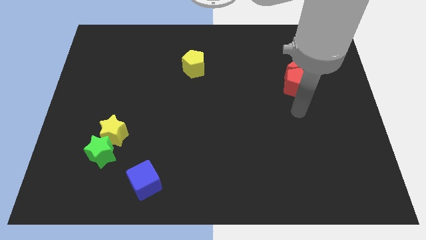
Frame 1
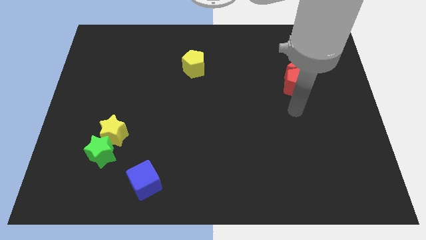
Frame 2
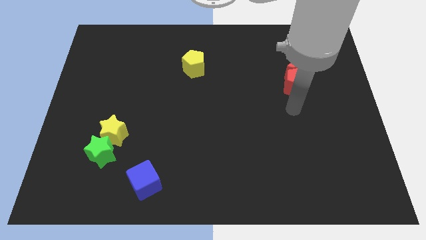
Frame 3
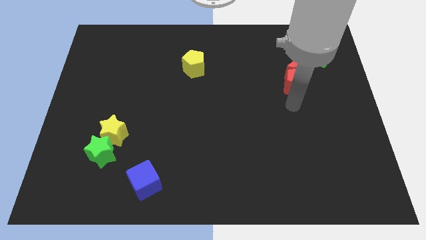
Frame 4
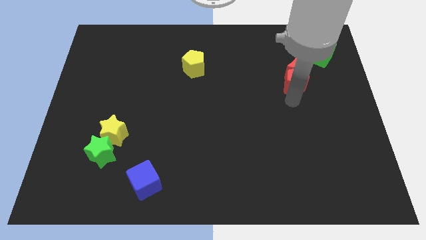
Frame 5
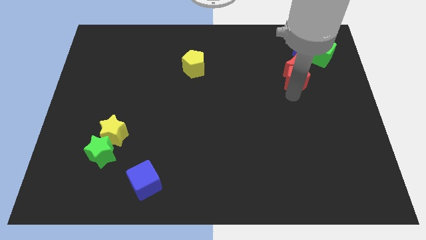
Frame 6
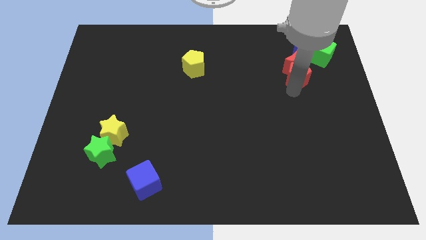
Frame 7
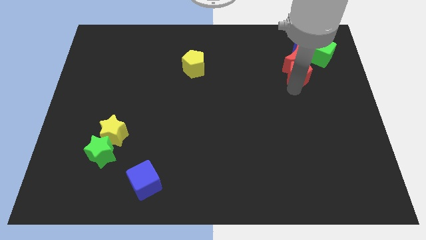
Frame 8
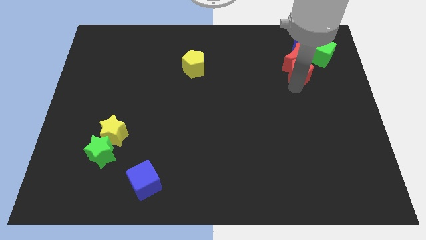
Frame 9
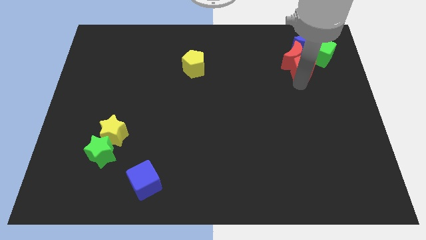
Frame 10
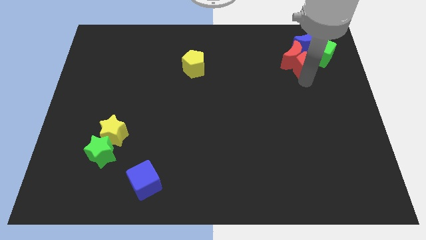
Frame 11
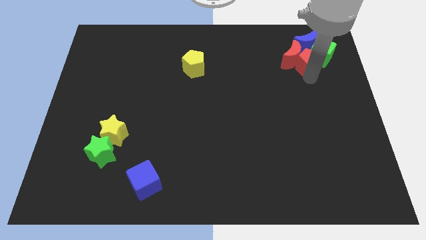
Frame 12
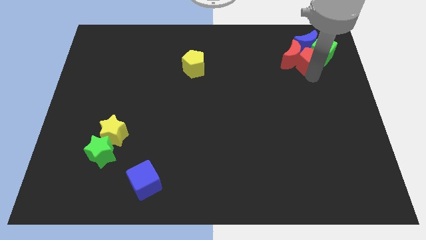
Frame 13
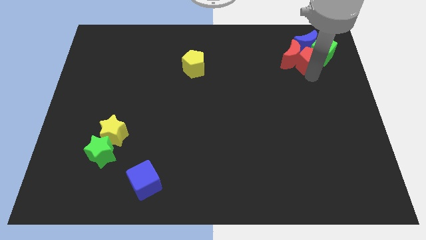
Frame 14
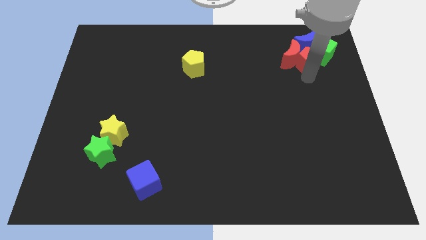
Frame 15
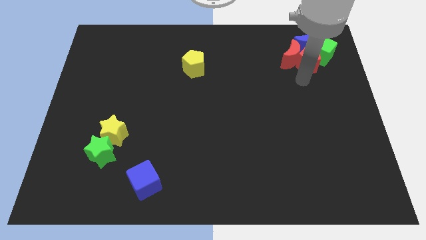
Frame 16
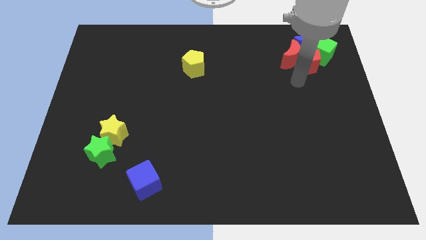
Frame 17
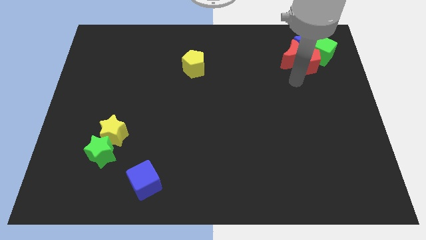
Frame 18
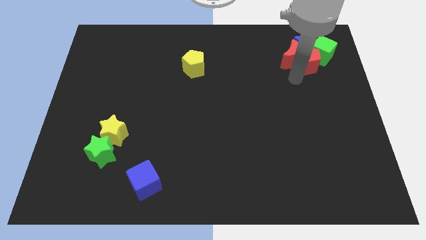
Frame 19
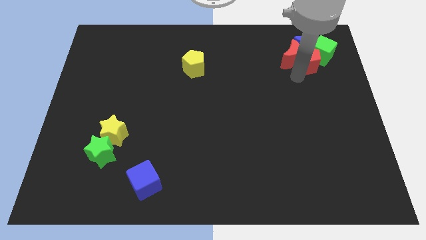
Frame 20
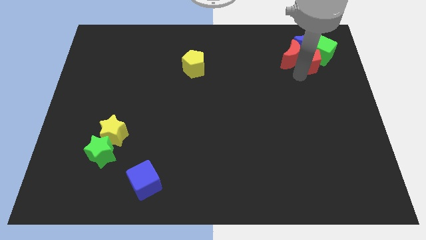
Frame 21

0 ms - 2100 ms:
push the red blocks below the green cube and blue moon

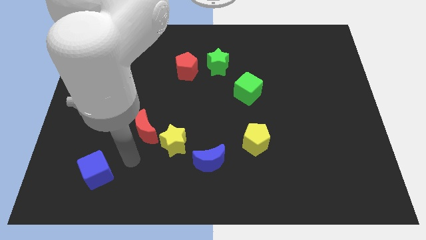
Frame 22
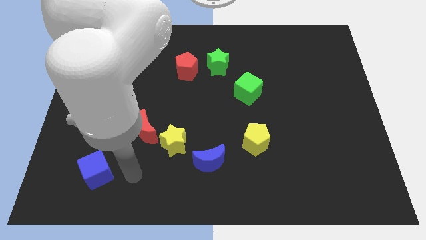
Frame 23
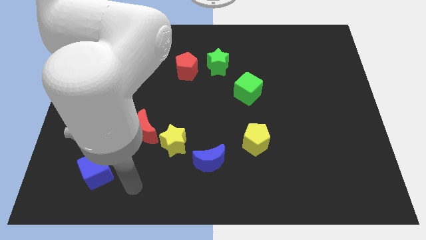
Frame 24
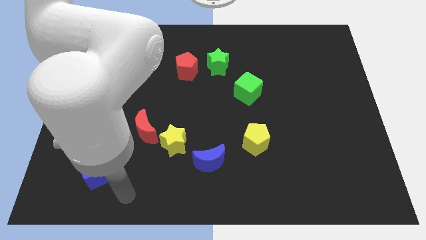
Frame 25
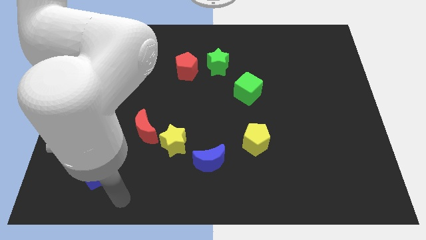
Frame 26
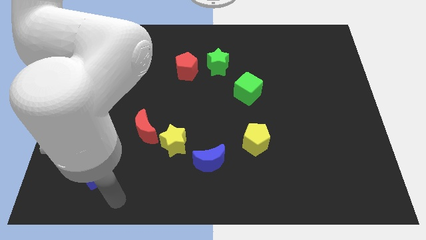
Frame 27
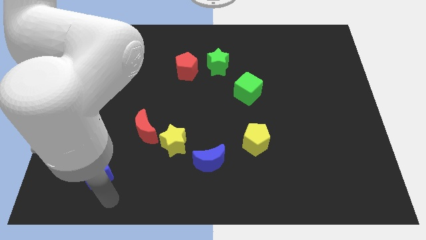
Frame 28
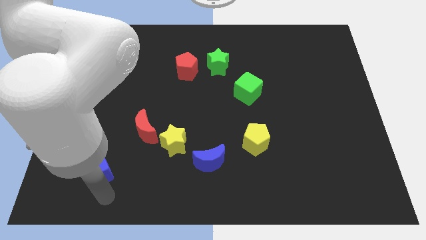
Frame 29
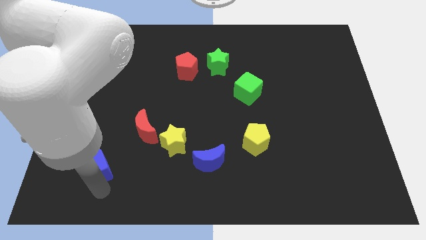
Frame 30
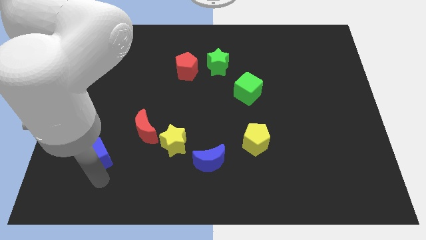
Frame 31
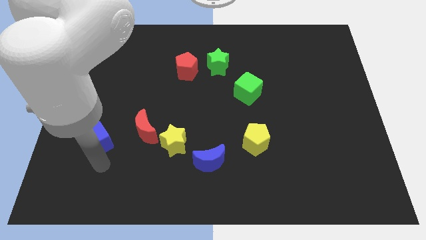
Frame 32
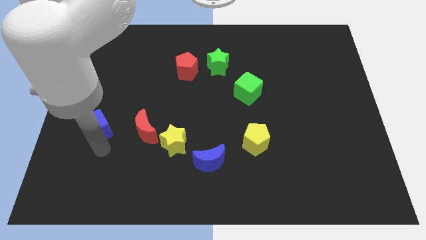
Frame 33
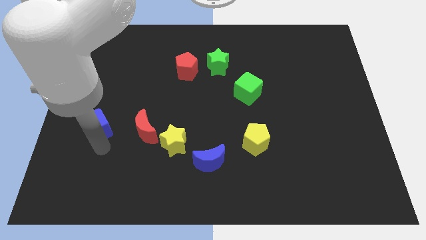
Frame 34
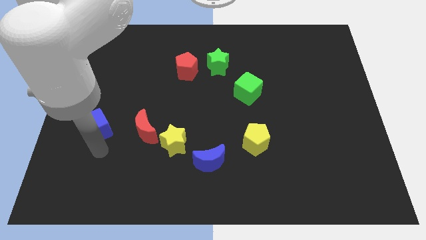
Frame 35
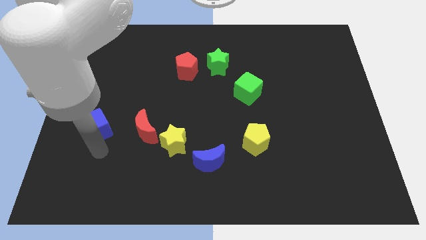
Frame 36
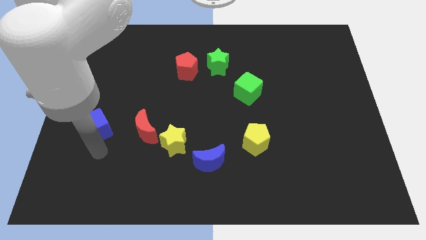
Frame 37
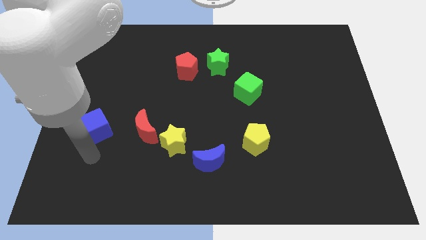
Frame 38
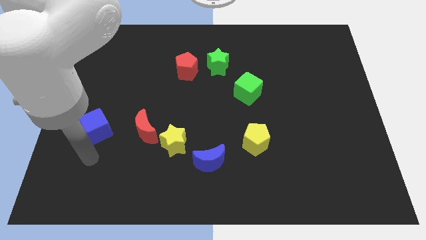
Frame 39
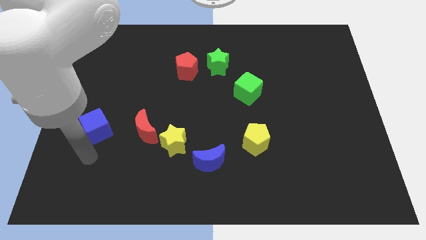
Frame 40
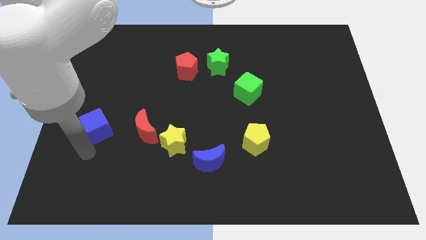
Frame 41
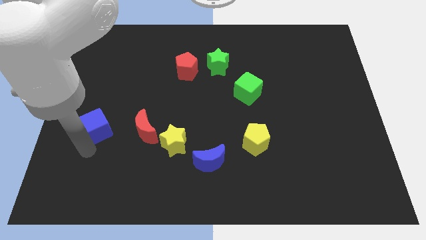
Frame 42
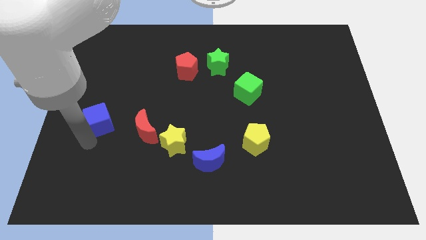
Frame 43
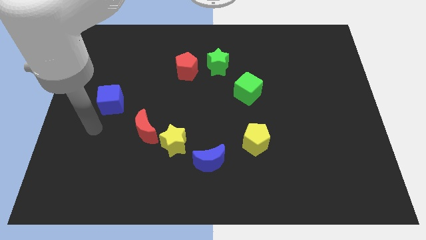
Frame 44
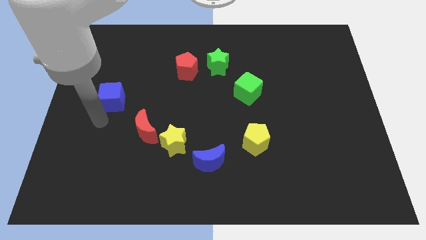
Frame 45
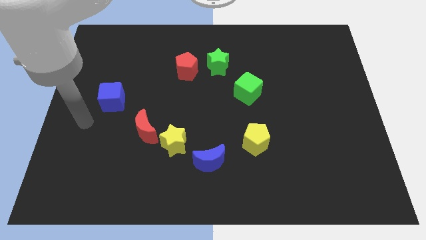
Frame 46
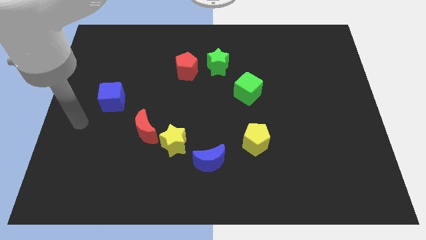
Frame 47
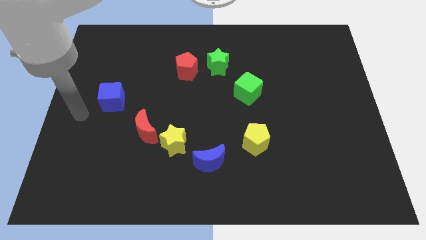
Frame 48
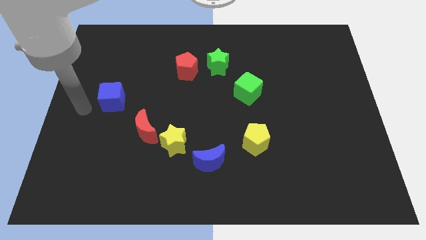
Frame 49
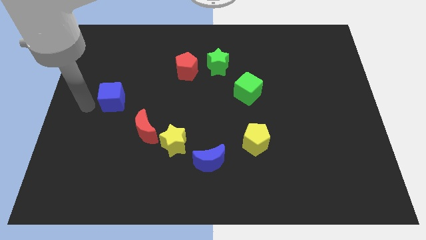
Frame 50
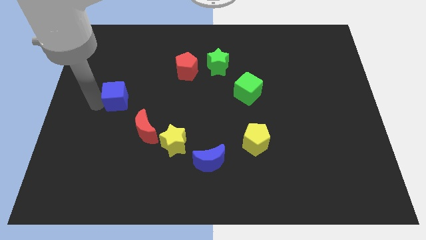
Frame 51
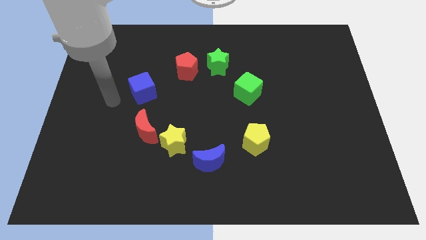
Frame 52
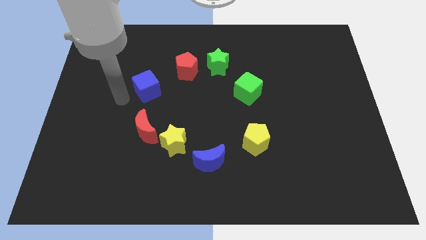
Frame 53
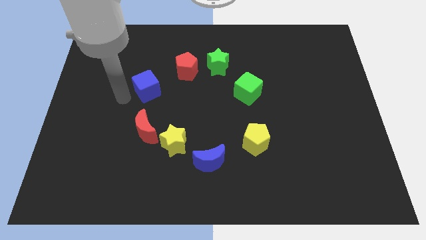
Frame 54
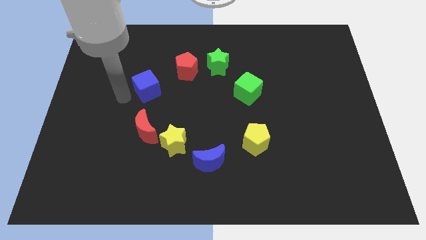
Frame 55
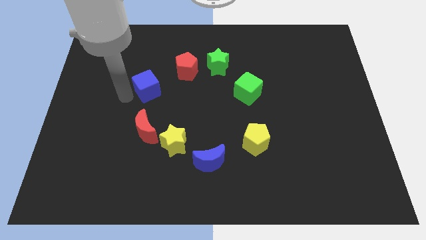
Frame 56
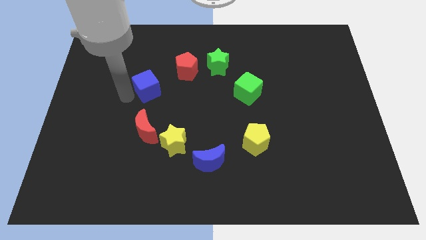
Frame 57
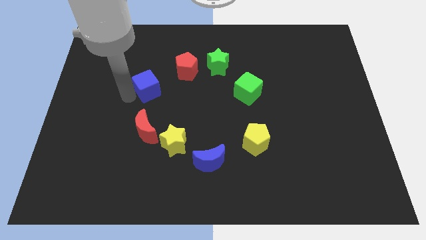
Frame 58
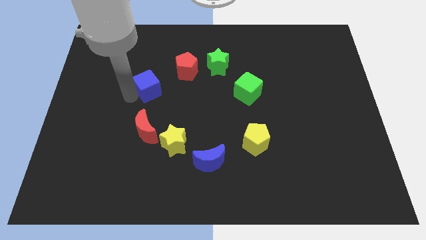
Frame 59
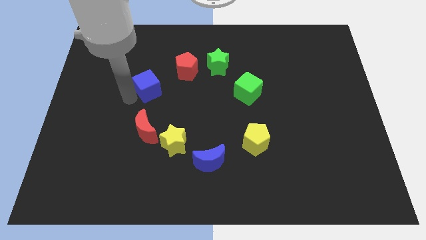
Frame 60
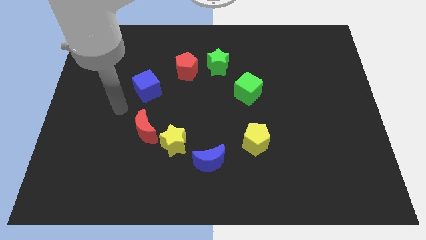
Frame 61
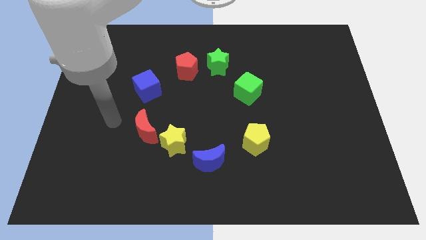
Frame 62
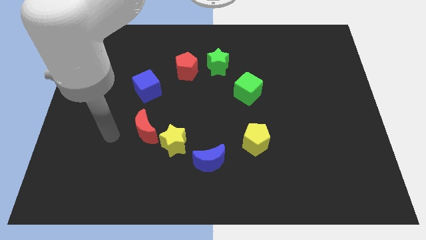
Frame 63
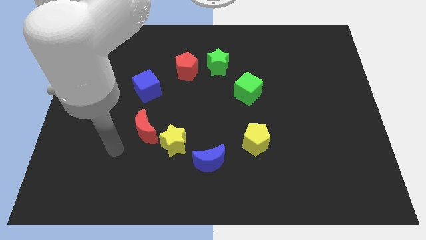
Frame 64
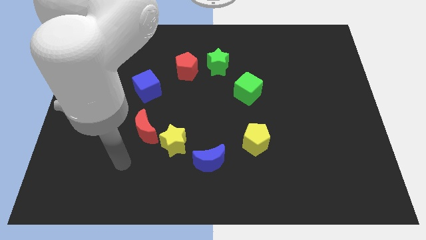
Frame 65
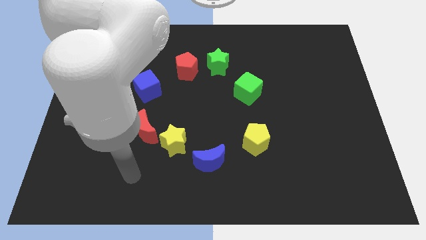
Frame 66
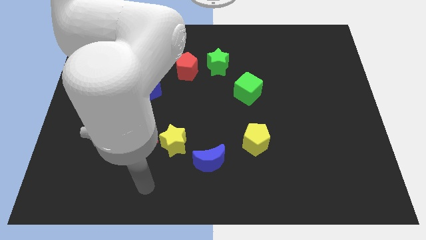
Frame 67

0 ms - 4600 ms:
place the blue cube to the top of the red crescent

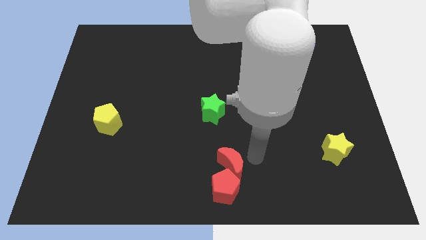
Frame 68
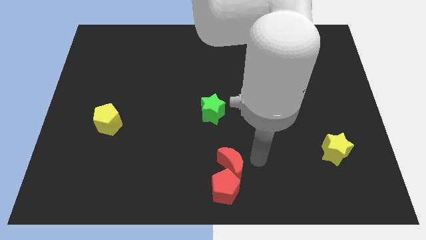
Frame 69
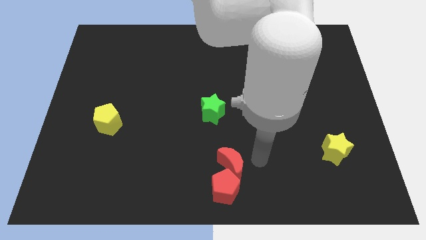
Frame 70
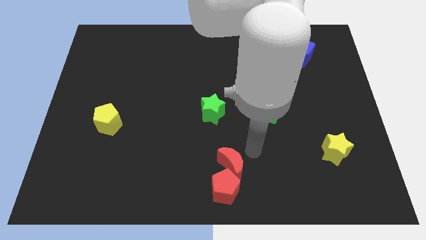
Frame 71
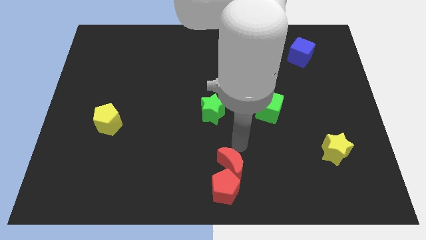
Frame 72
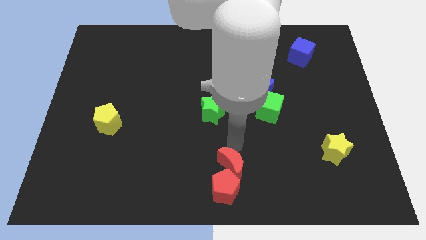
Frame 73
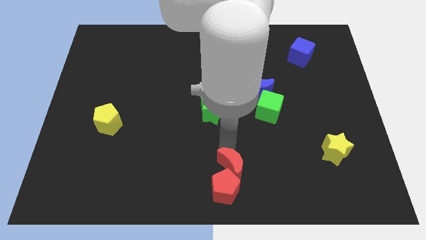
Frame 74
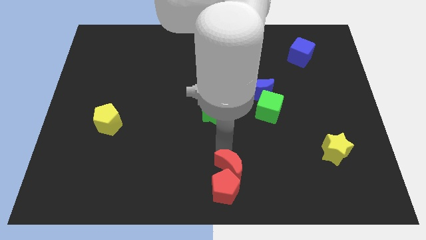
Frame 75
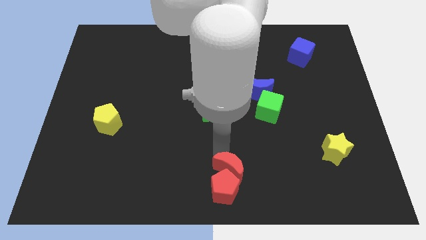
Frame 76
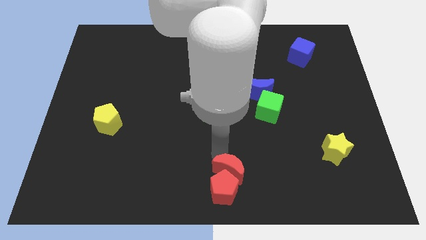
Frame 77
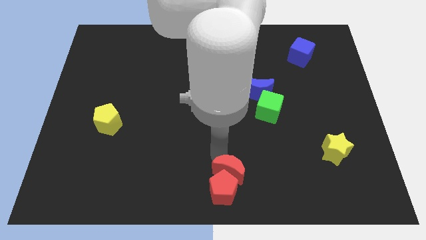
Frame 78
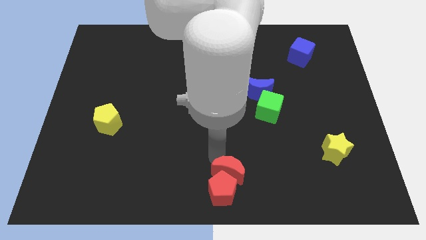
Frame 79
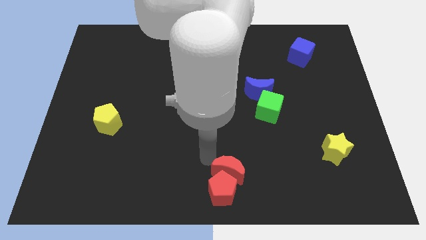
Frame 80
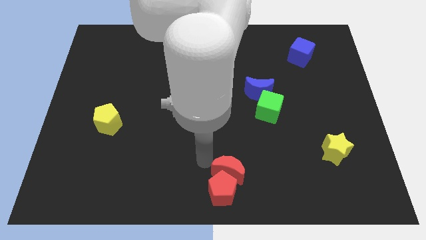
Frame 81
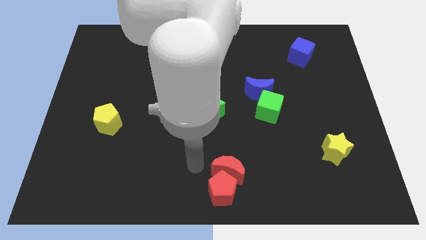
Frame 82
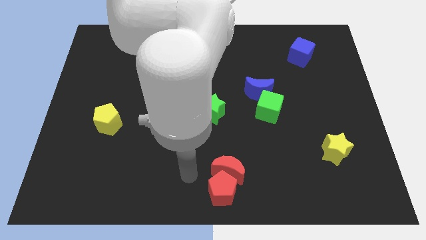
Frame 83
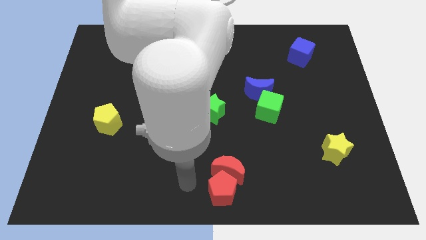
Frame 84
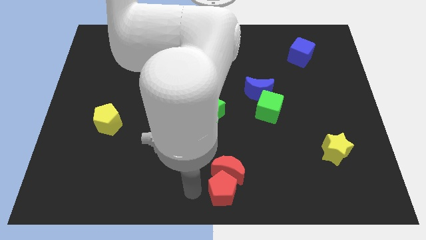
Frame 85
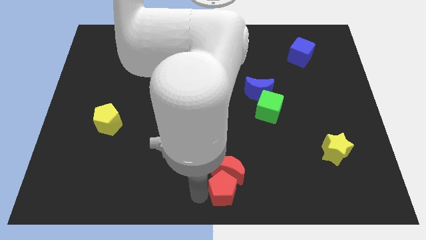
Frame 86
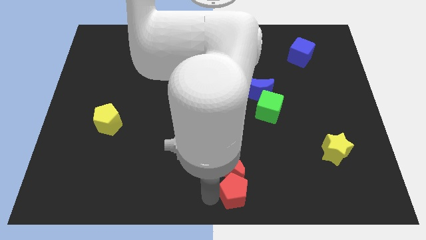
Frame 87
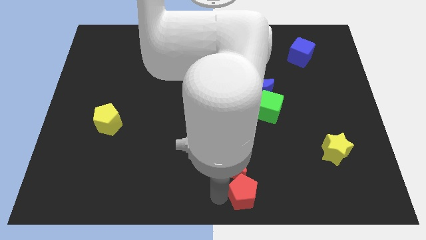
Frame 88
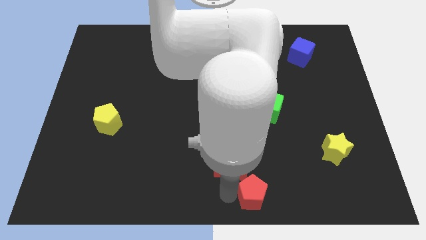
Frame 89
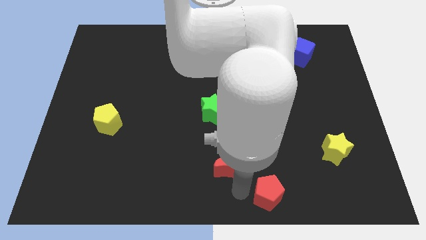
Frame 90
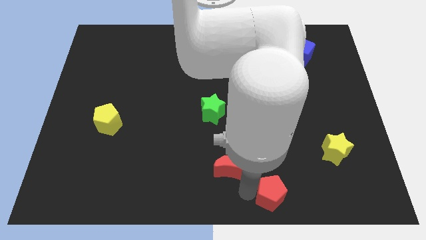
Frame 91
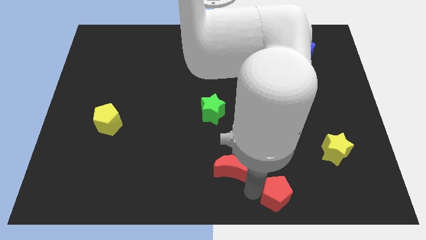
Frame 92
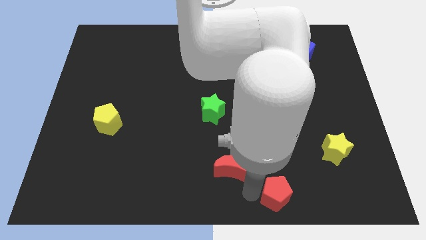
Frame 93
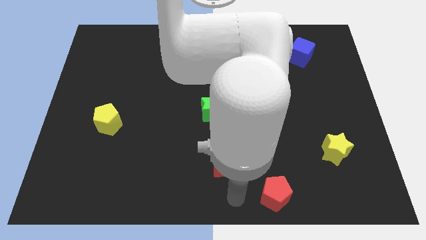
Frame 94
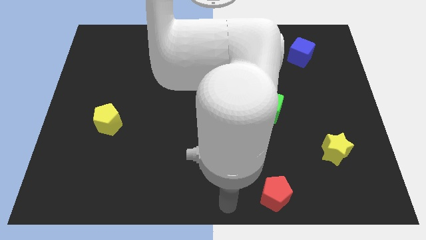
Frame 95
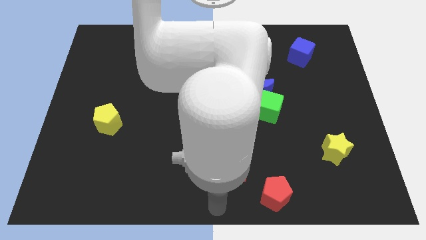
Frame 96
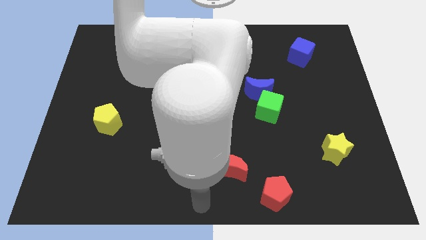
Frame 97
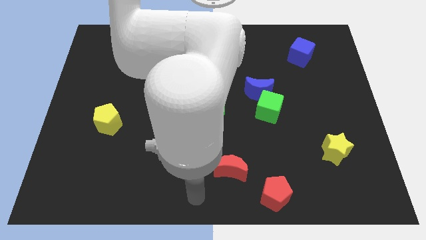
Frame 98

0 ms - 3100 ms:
push the red pentagon to the bottom right of the red crescent
